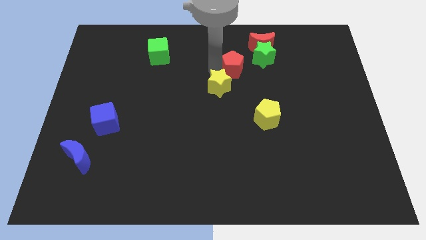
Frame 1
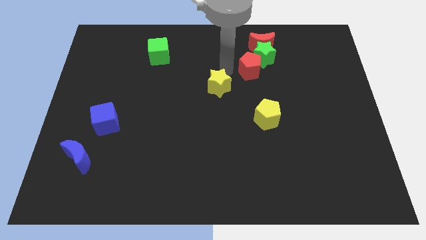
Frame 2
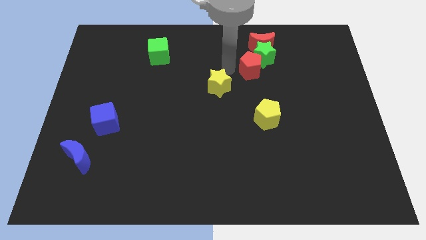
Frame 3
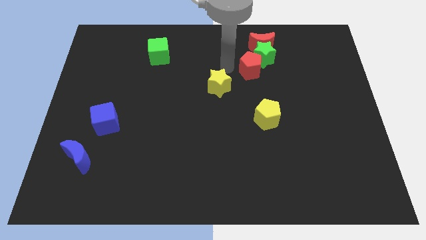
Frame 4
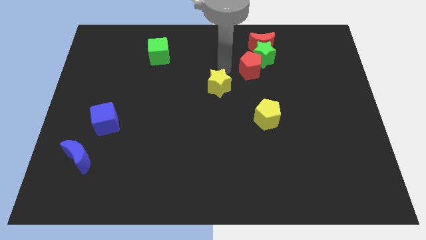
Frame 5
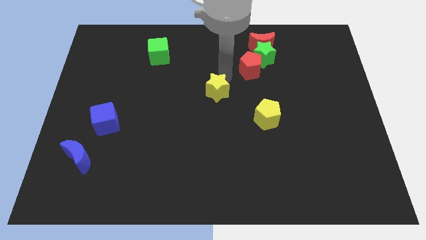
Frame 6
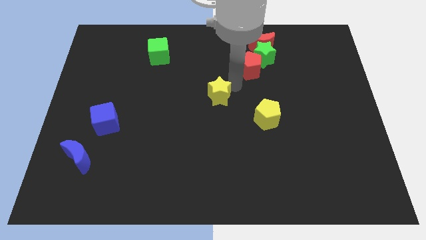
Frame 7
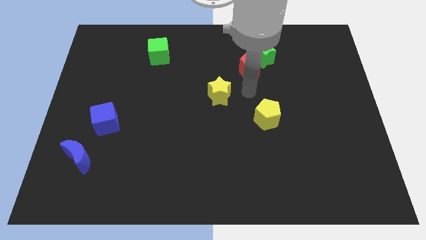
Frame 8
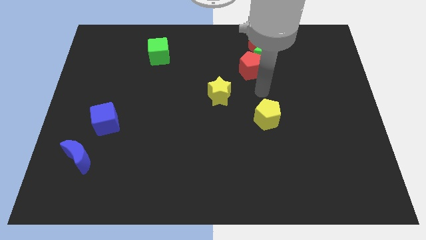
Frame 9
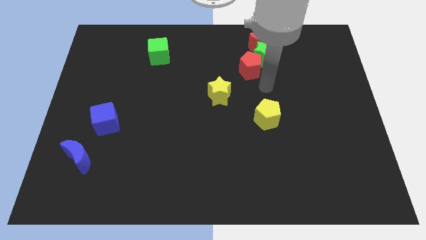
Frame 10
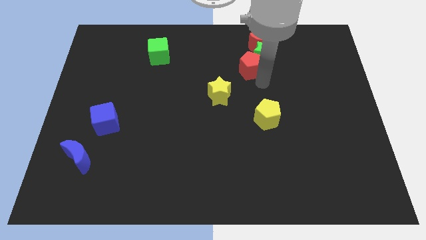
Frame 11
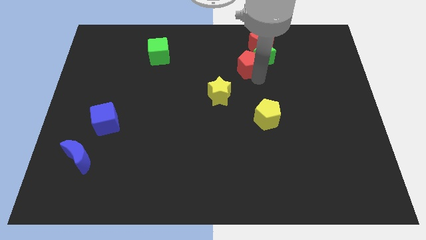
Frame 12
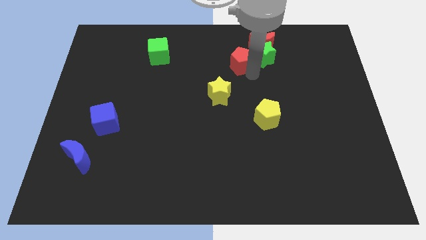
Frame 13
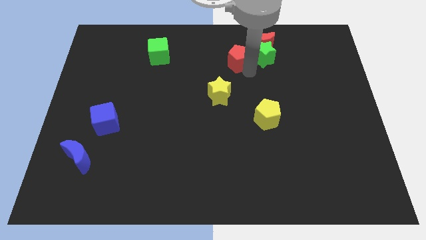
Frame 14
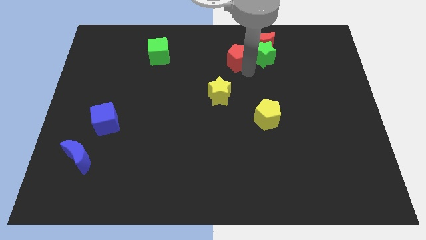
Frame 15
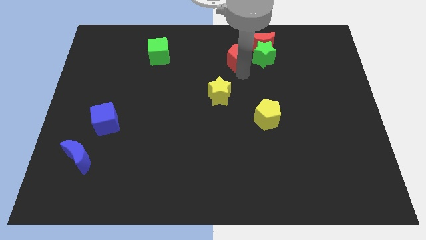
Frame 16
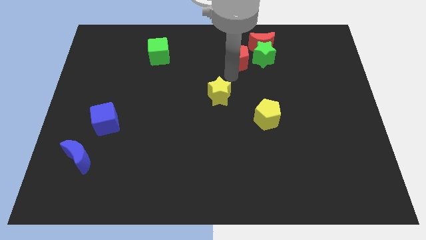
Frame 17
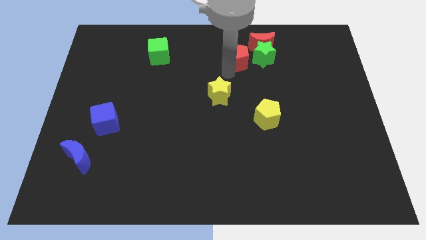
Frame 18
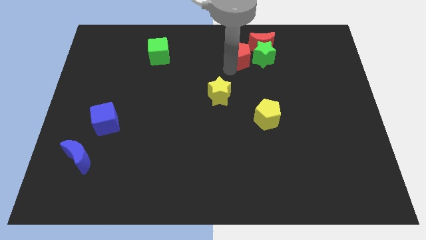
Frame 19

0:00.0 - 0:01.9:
push red pentagon left to the green star

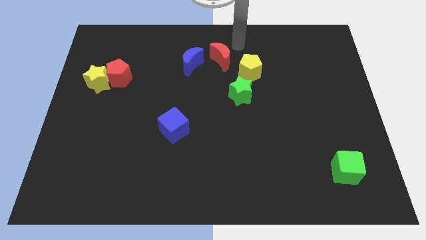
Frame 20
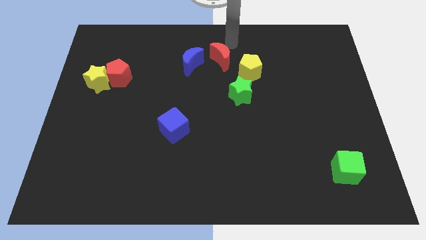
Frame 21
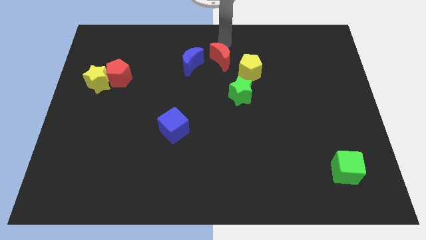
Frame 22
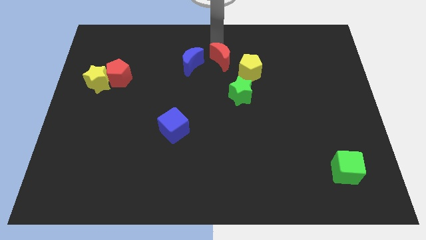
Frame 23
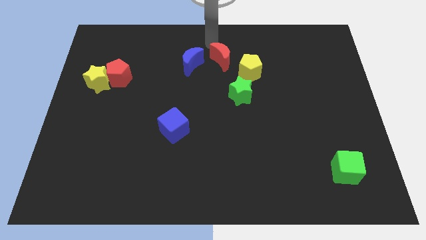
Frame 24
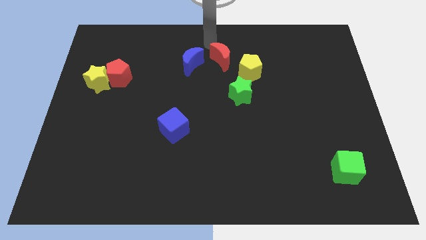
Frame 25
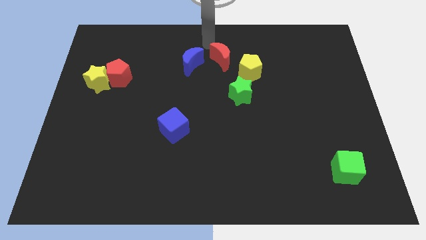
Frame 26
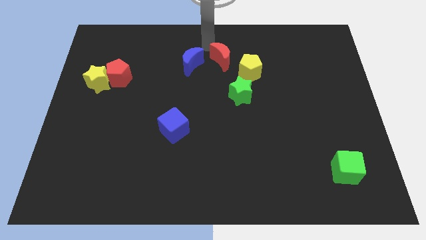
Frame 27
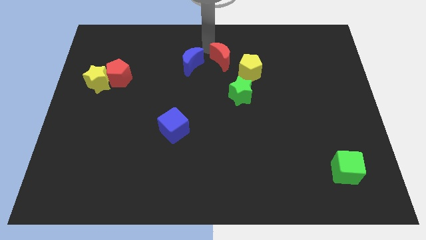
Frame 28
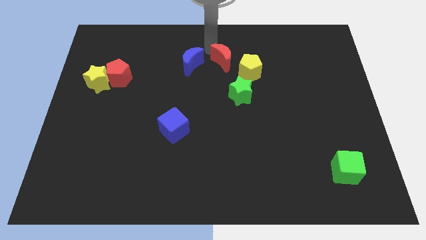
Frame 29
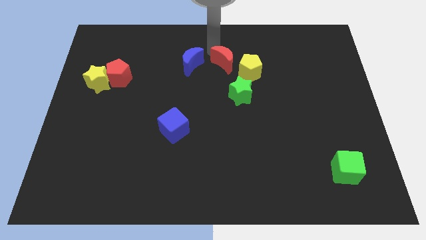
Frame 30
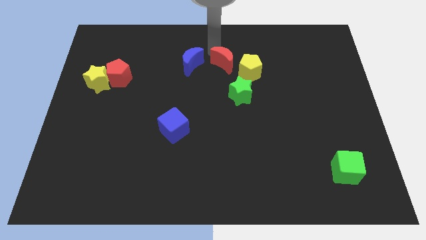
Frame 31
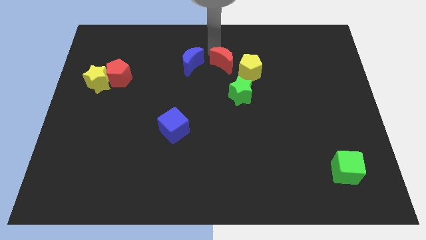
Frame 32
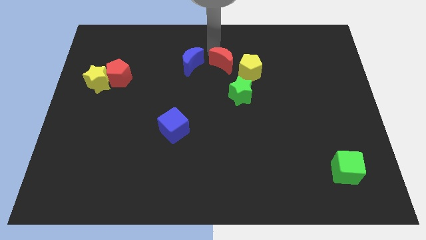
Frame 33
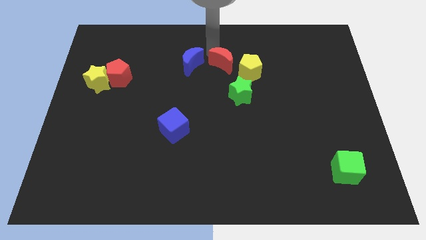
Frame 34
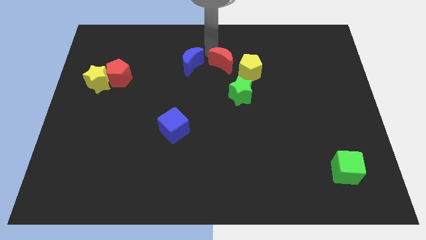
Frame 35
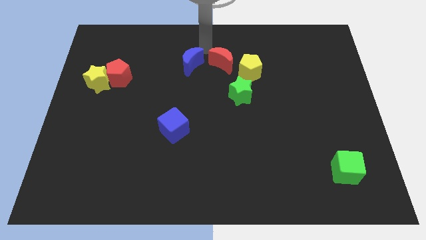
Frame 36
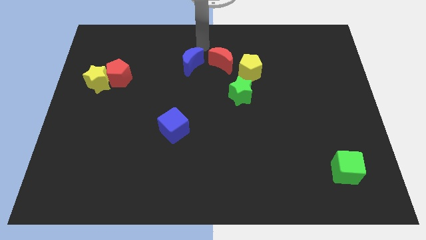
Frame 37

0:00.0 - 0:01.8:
push the red moon downwards slightly

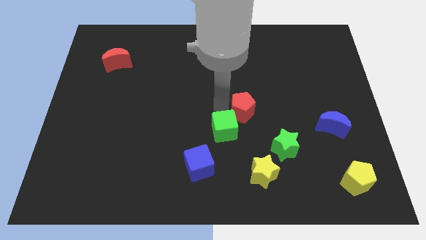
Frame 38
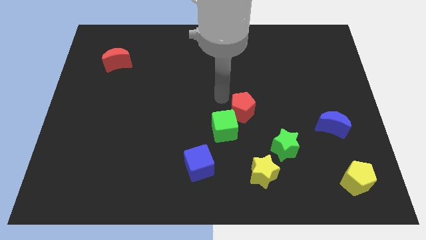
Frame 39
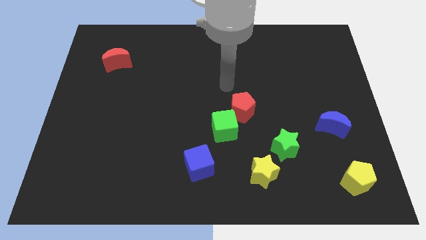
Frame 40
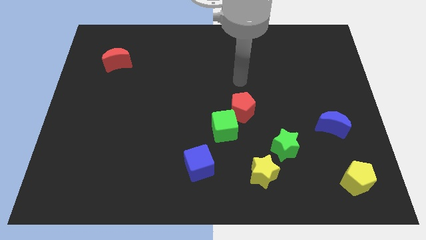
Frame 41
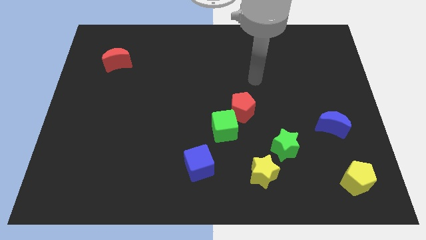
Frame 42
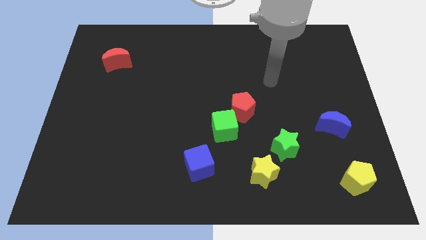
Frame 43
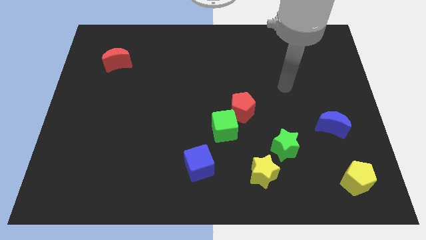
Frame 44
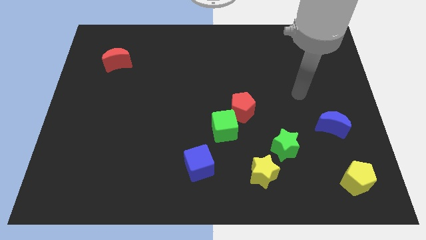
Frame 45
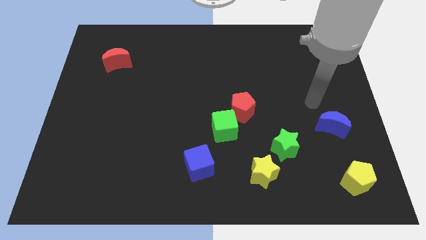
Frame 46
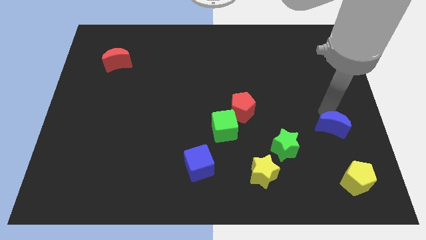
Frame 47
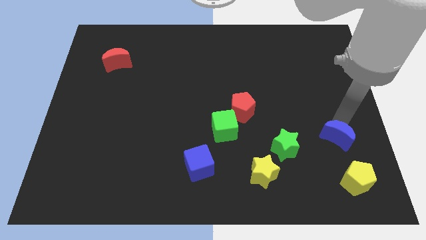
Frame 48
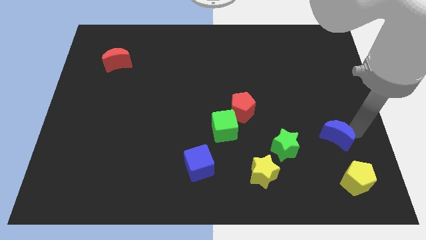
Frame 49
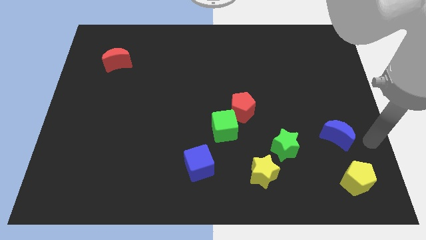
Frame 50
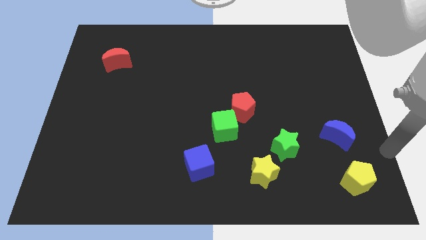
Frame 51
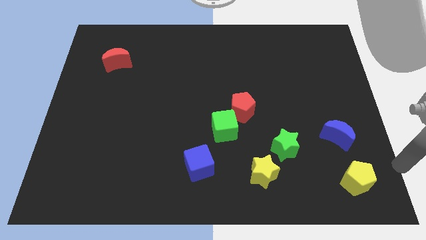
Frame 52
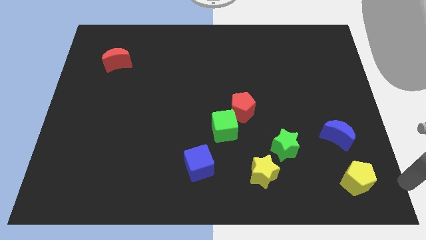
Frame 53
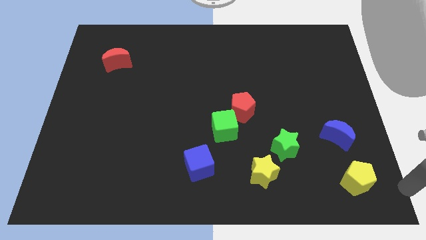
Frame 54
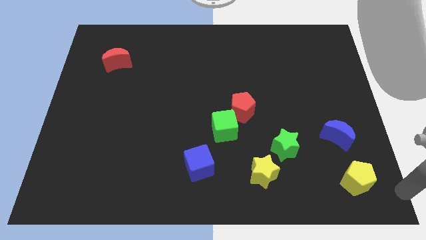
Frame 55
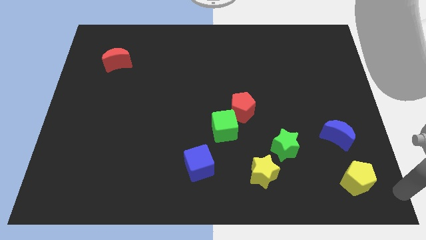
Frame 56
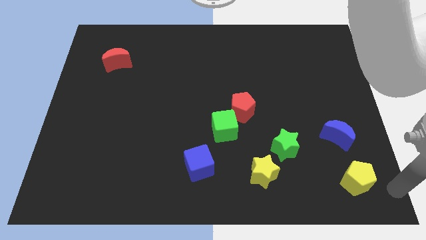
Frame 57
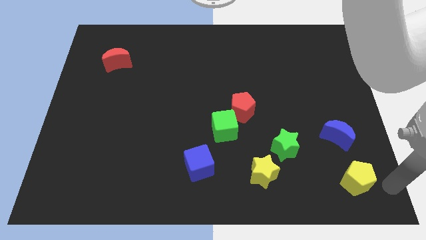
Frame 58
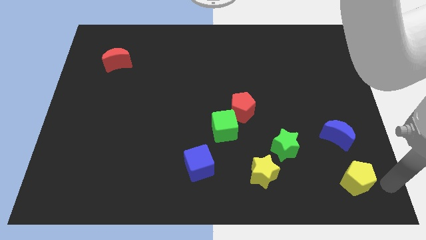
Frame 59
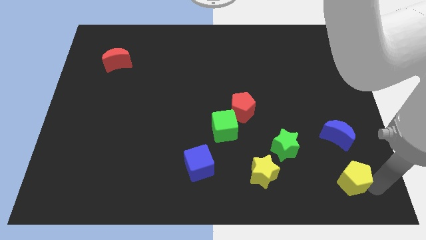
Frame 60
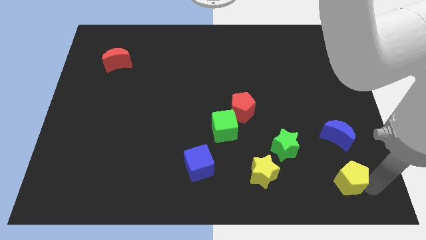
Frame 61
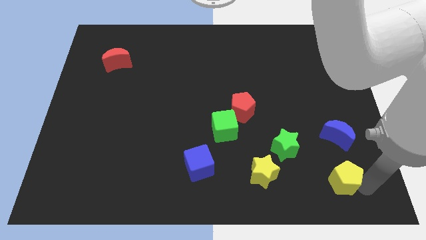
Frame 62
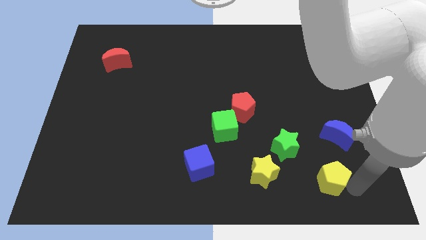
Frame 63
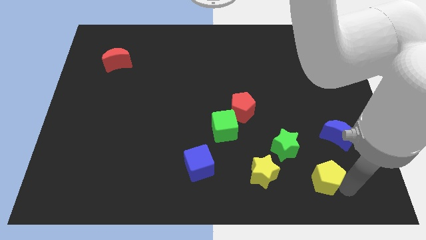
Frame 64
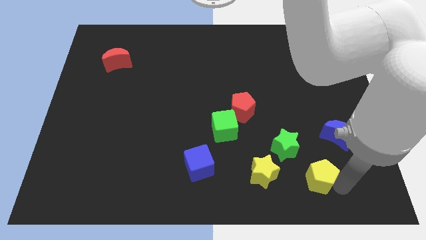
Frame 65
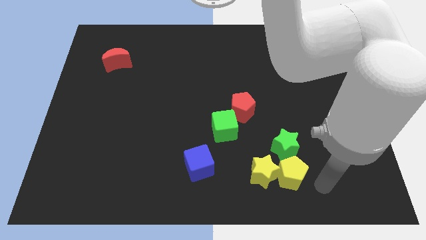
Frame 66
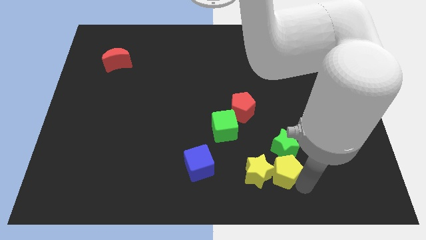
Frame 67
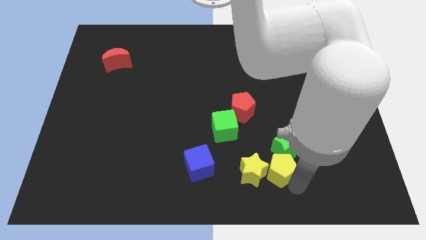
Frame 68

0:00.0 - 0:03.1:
place the yellow pentagon below the blue moon

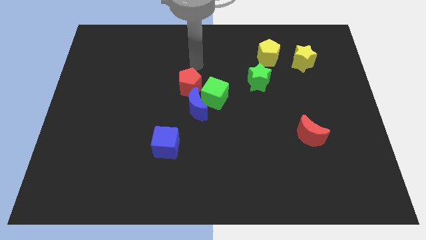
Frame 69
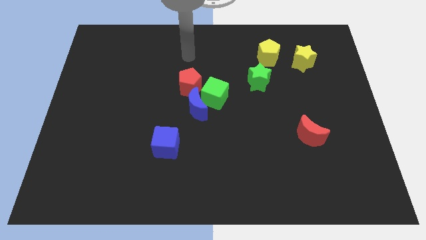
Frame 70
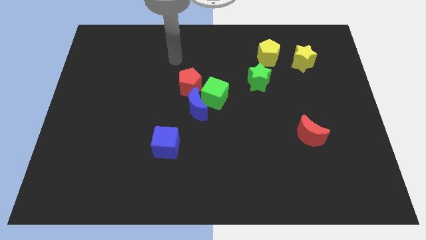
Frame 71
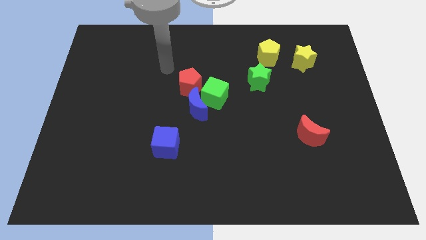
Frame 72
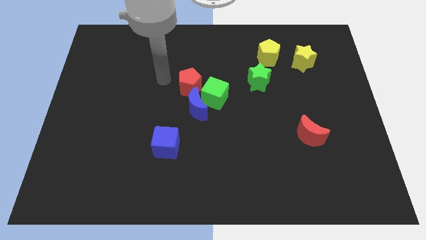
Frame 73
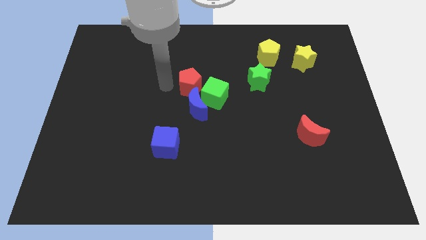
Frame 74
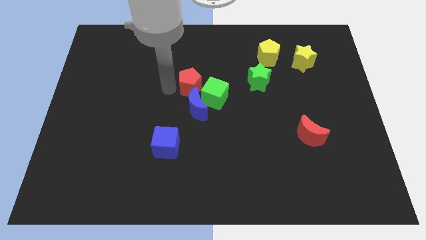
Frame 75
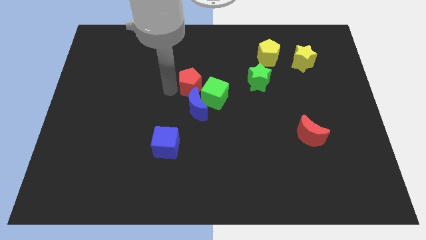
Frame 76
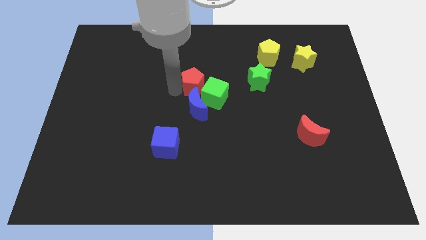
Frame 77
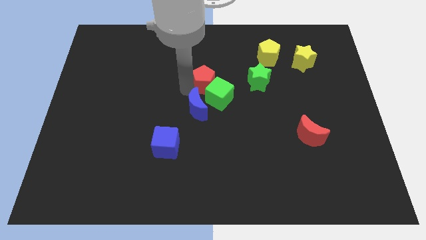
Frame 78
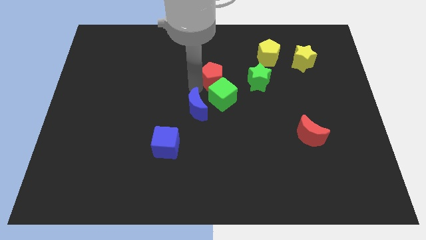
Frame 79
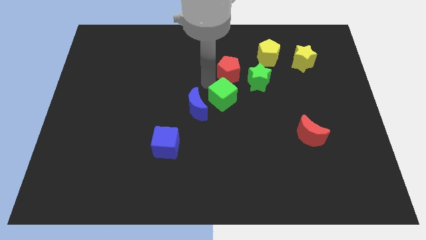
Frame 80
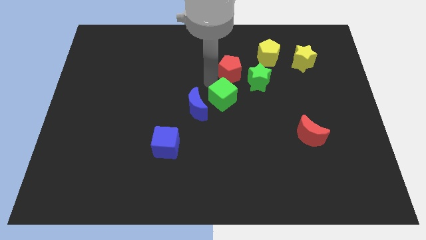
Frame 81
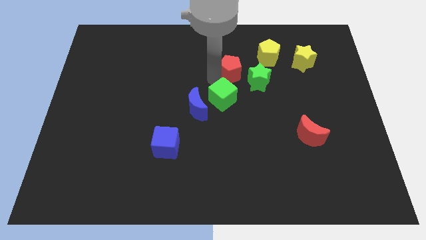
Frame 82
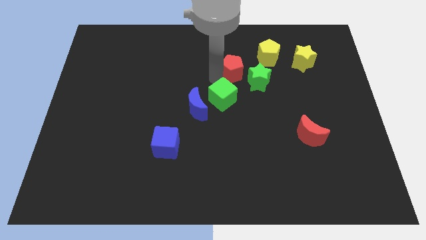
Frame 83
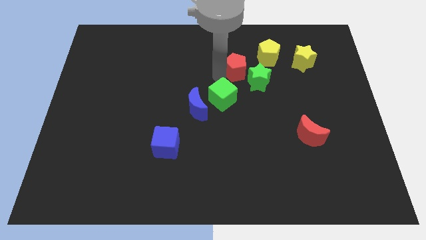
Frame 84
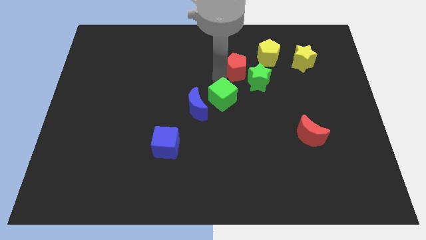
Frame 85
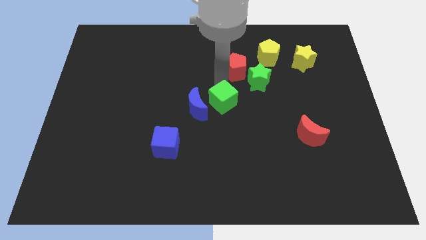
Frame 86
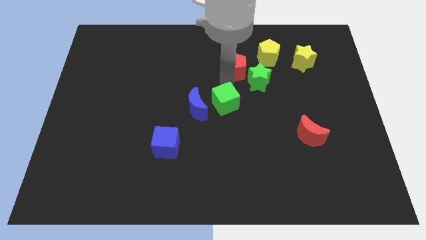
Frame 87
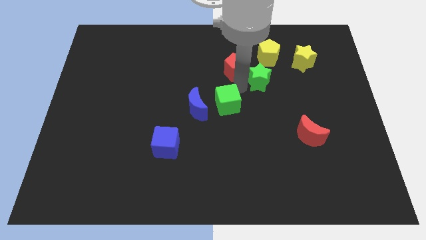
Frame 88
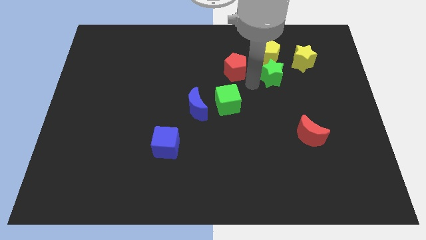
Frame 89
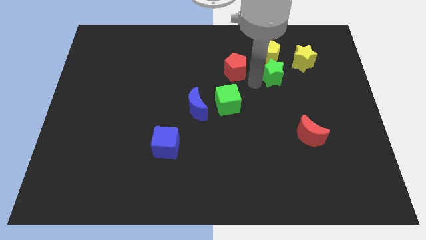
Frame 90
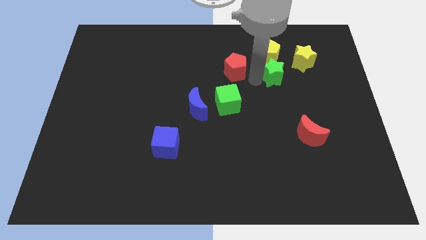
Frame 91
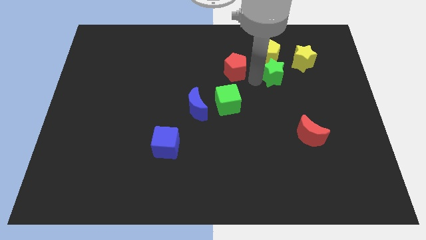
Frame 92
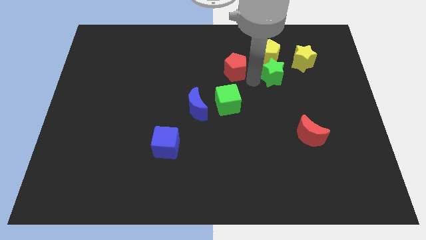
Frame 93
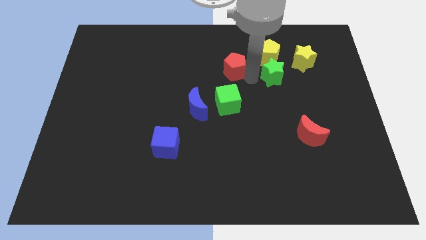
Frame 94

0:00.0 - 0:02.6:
separate red pentagon from the green blocks
